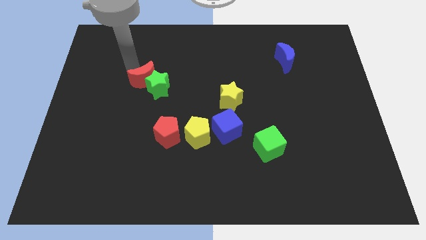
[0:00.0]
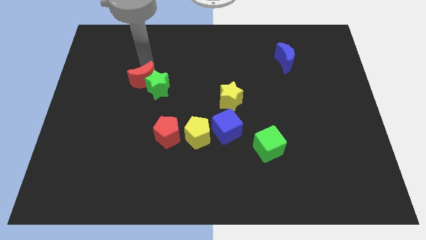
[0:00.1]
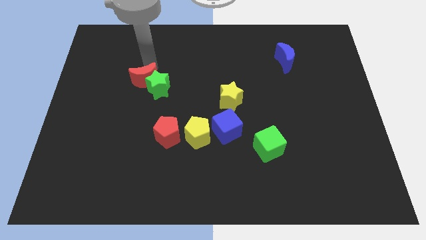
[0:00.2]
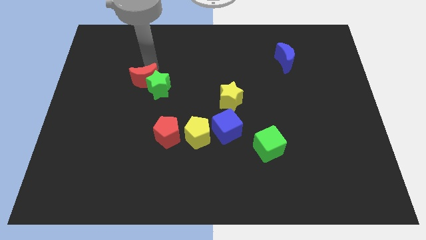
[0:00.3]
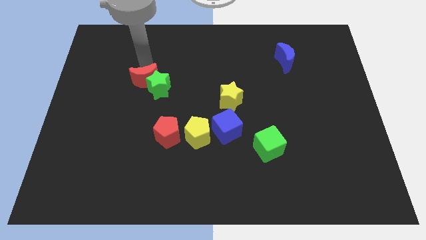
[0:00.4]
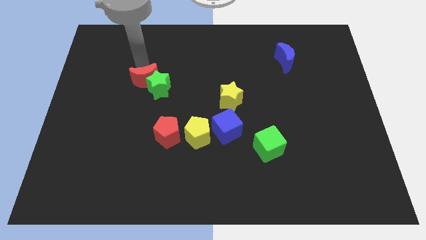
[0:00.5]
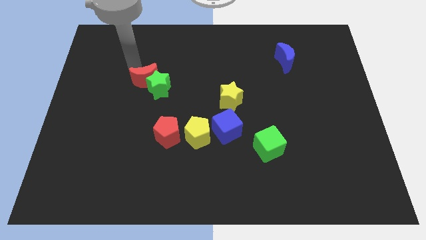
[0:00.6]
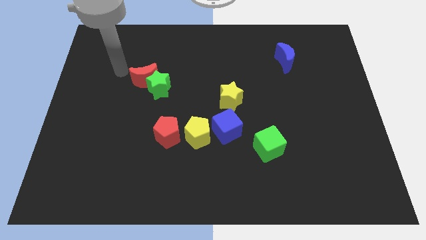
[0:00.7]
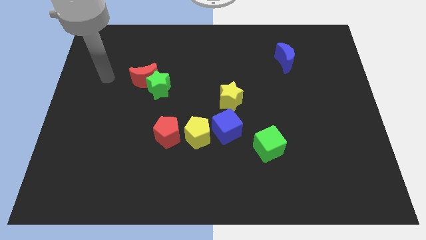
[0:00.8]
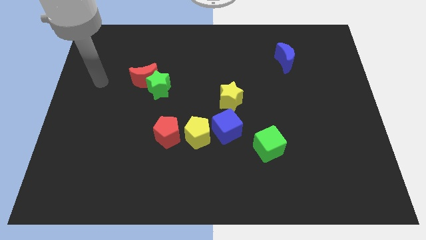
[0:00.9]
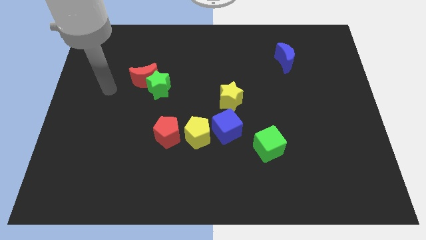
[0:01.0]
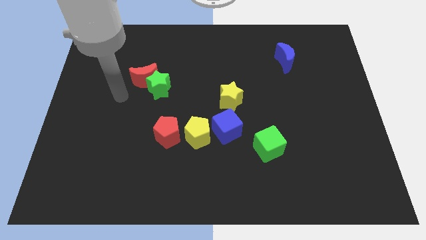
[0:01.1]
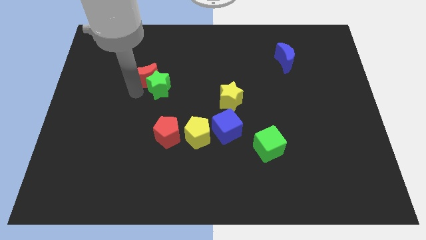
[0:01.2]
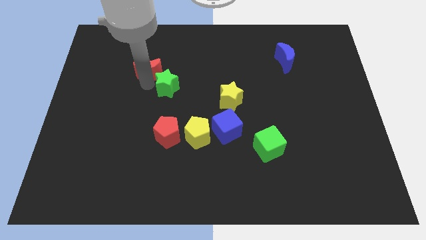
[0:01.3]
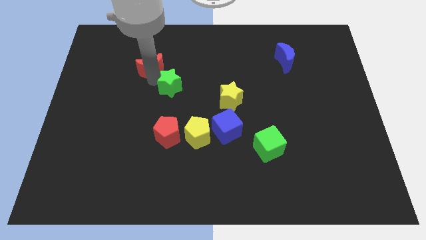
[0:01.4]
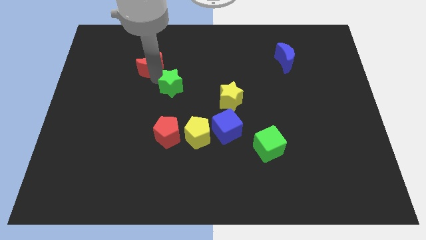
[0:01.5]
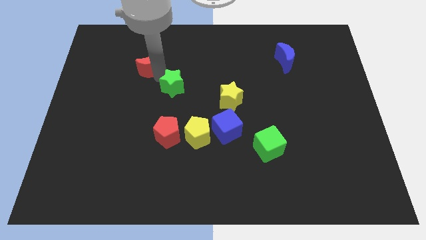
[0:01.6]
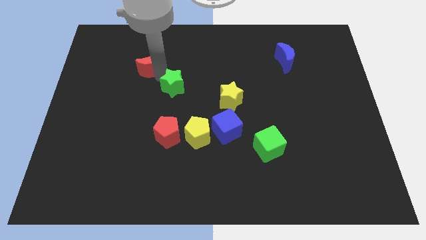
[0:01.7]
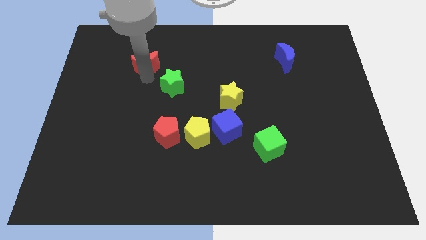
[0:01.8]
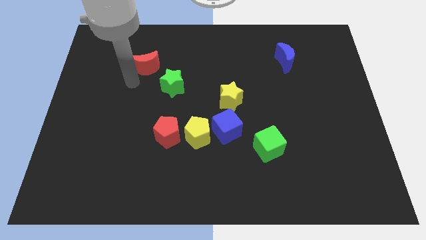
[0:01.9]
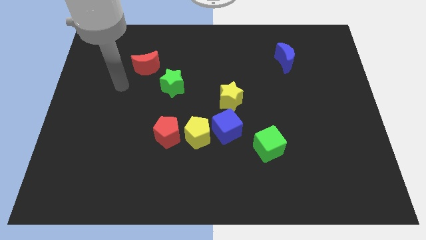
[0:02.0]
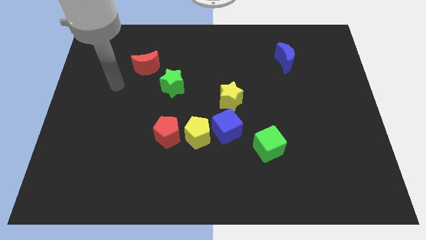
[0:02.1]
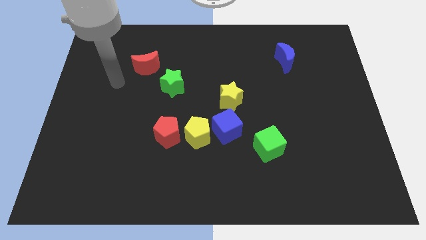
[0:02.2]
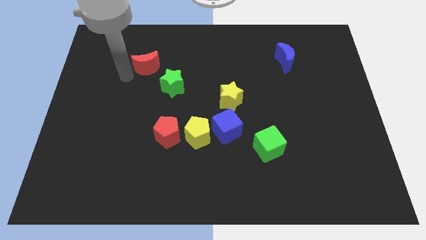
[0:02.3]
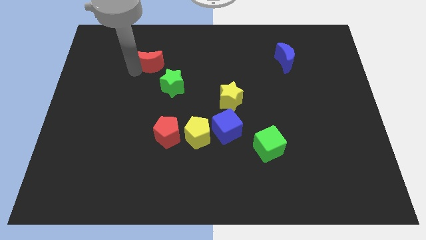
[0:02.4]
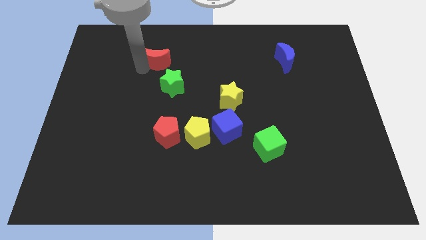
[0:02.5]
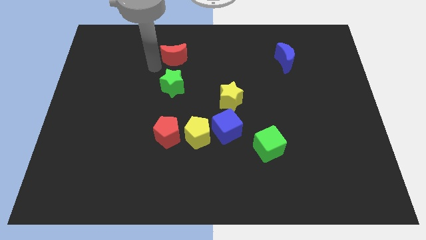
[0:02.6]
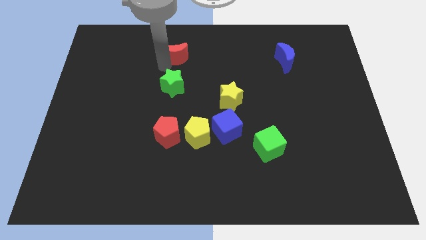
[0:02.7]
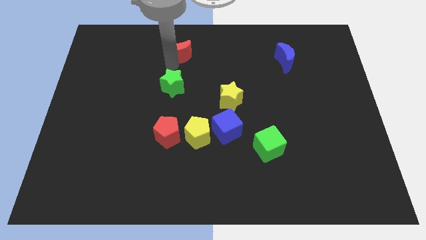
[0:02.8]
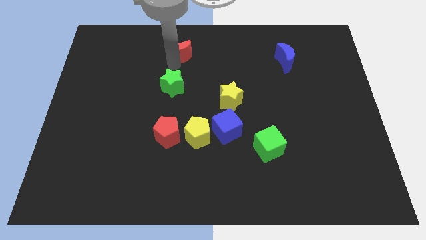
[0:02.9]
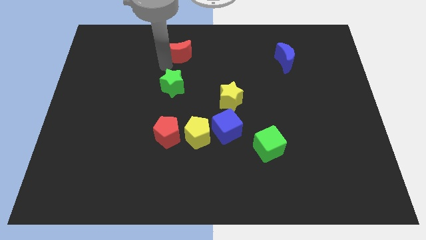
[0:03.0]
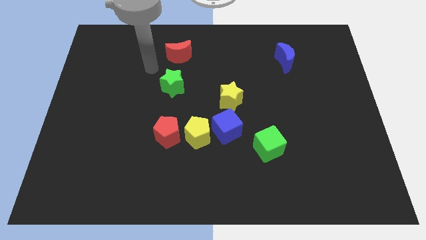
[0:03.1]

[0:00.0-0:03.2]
move the red moon above the green star

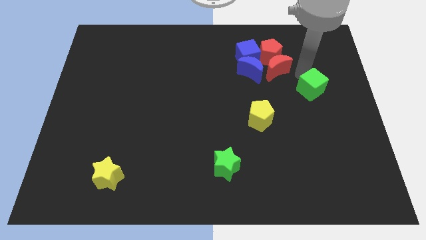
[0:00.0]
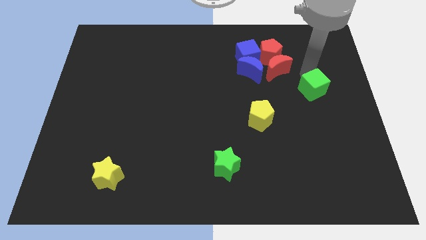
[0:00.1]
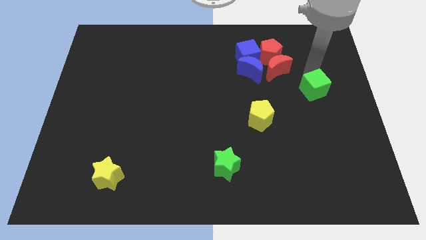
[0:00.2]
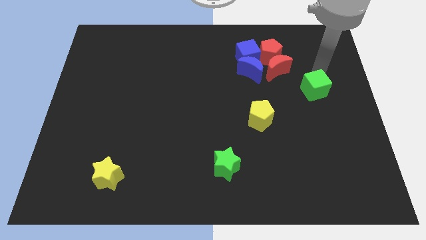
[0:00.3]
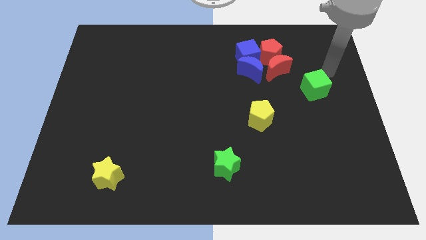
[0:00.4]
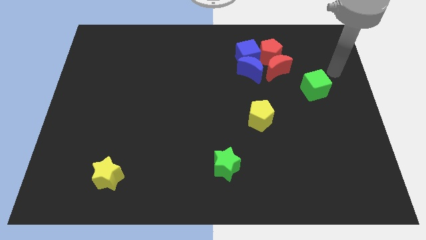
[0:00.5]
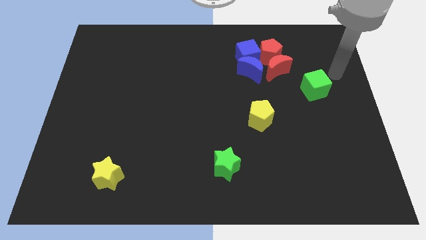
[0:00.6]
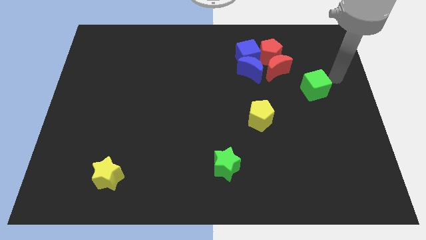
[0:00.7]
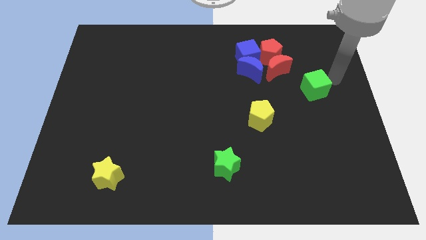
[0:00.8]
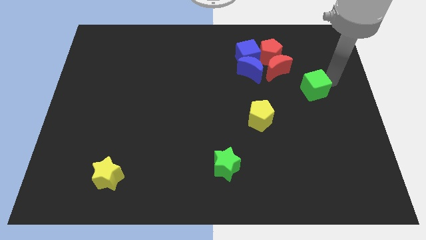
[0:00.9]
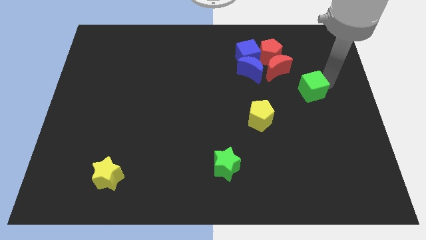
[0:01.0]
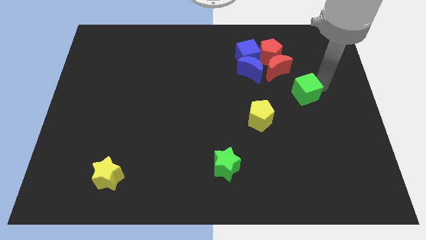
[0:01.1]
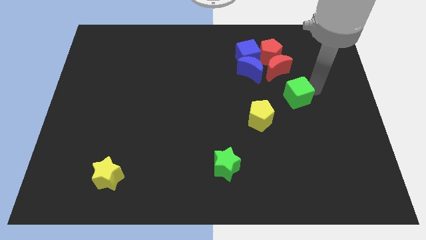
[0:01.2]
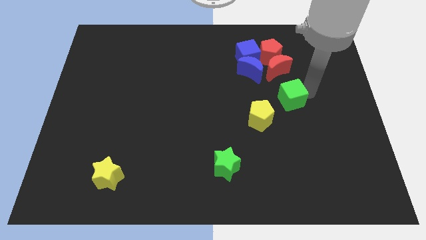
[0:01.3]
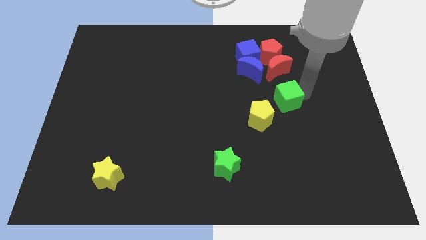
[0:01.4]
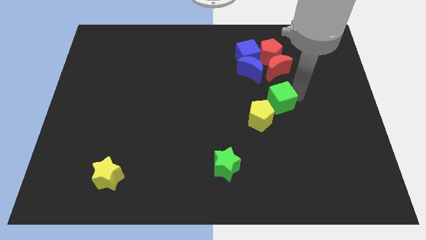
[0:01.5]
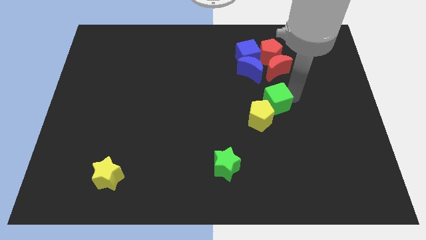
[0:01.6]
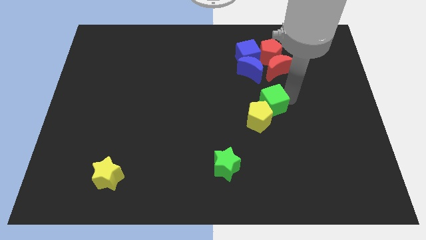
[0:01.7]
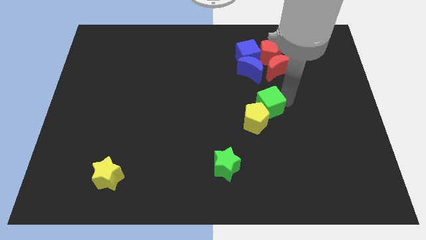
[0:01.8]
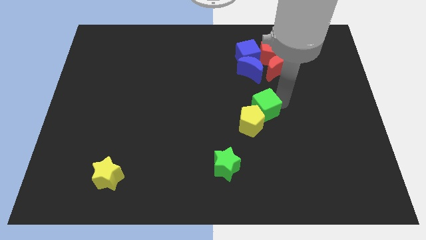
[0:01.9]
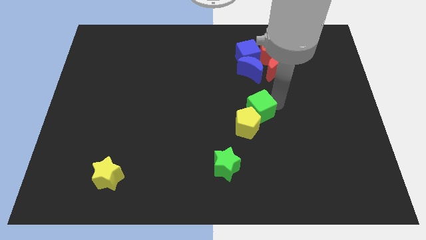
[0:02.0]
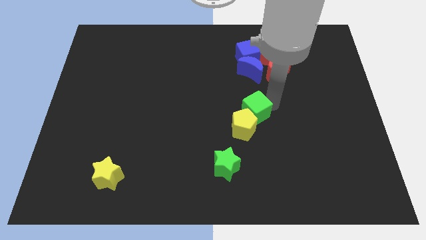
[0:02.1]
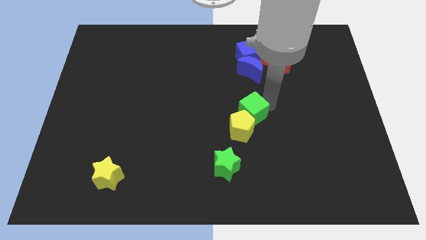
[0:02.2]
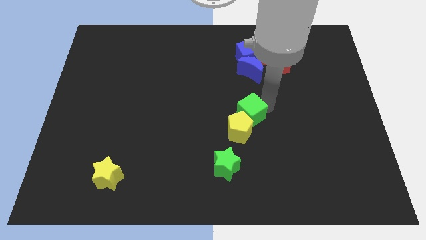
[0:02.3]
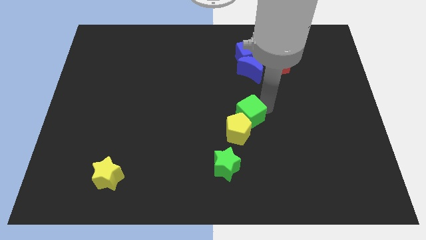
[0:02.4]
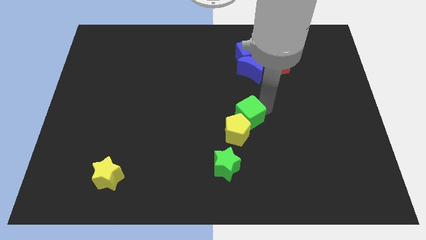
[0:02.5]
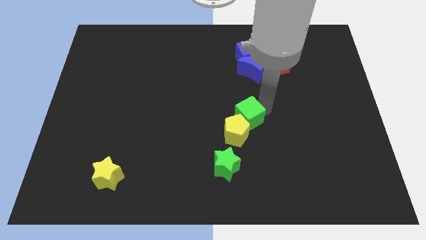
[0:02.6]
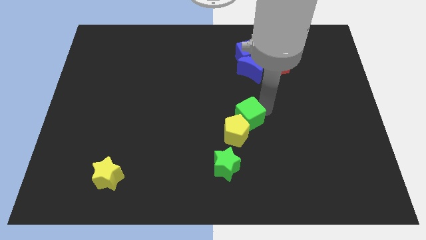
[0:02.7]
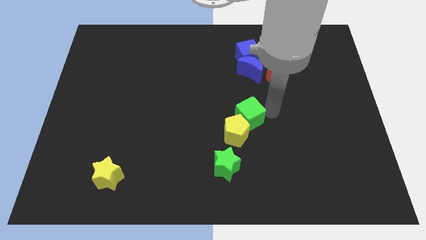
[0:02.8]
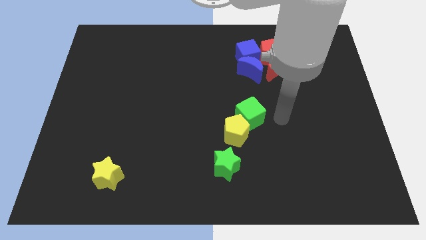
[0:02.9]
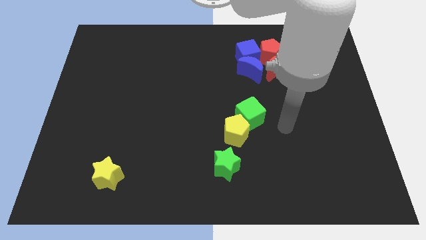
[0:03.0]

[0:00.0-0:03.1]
place the green cube at the top right side of the yellow pentagon

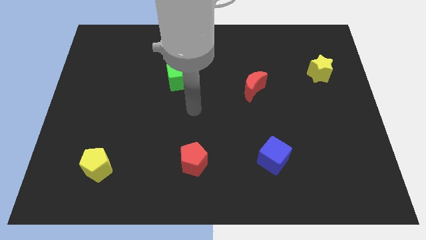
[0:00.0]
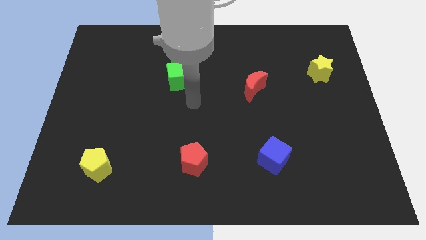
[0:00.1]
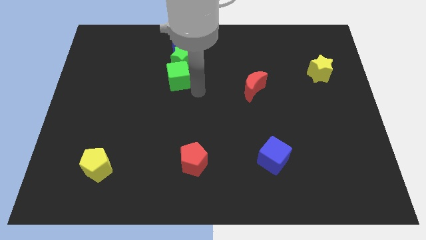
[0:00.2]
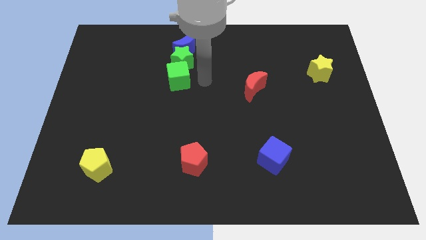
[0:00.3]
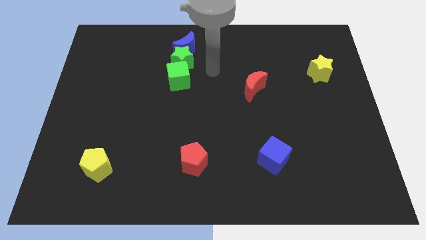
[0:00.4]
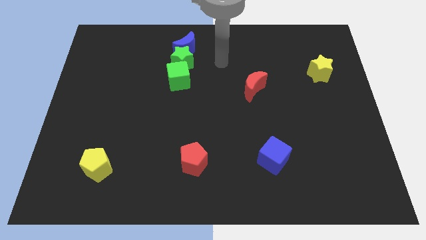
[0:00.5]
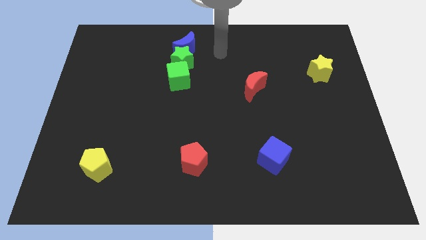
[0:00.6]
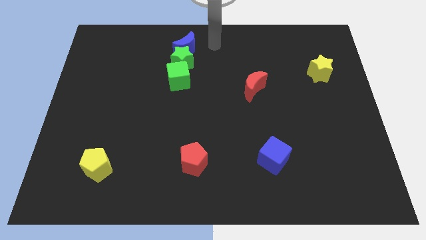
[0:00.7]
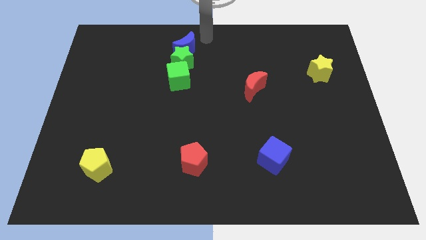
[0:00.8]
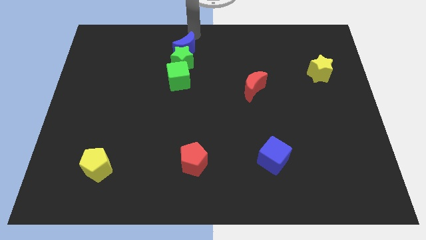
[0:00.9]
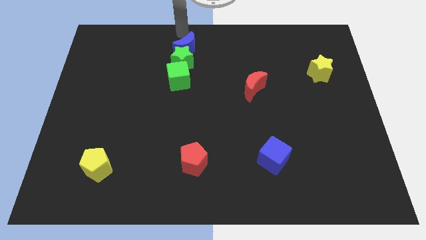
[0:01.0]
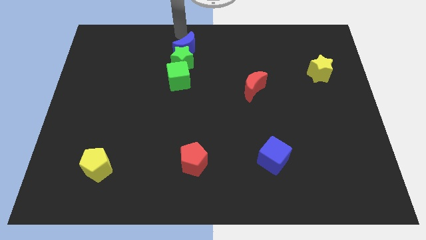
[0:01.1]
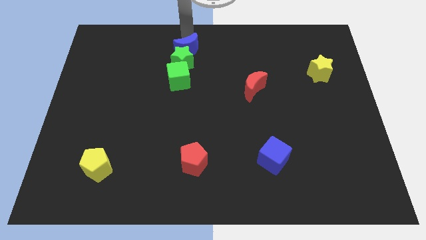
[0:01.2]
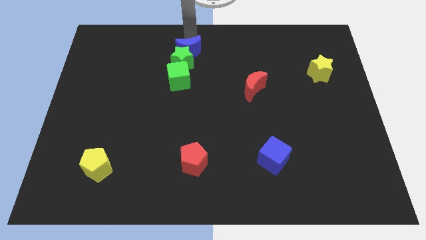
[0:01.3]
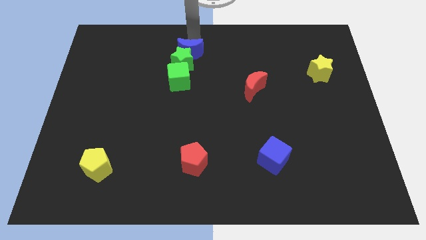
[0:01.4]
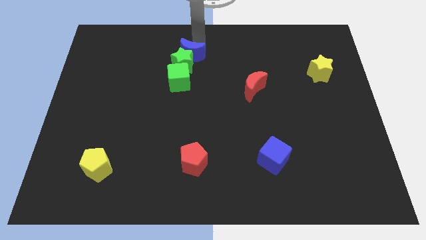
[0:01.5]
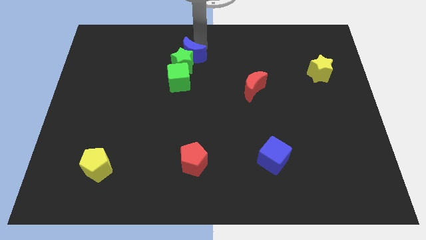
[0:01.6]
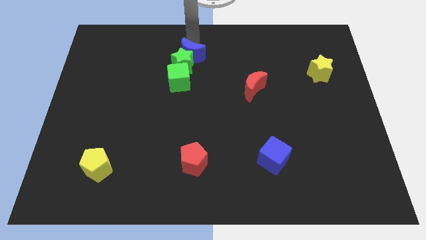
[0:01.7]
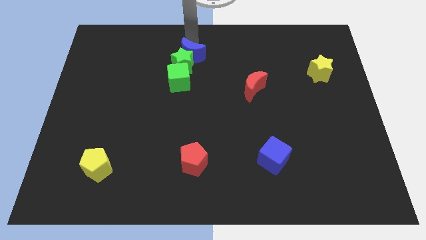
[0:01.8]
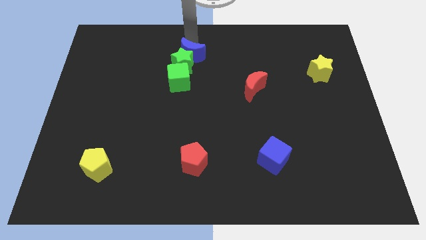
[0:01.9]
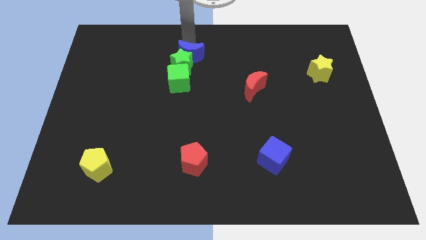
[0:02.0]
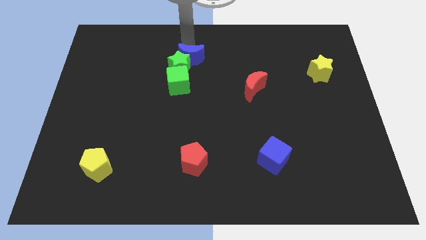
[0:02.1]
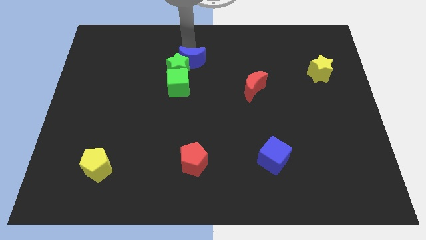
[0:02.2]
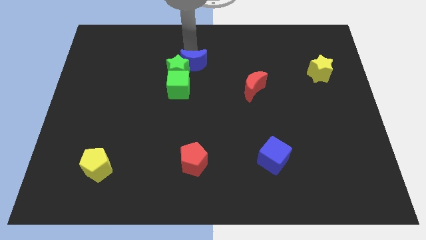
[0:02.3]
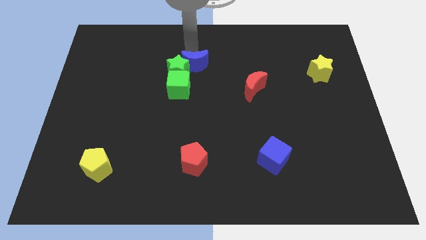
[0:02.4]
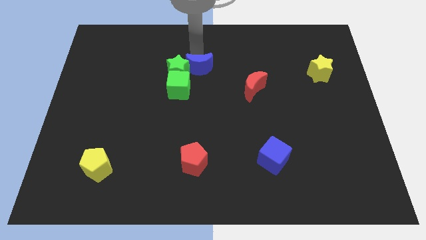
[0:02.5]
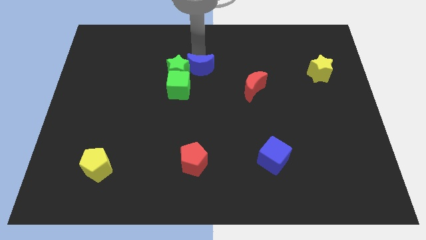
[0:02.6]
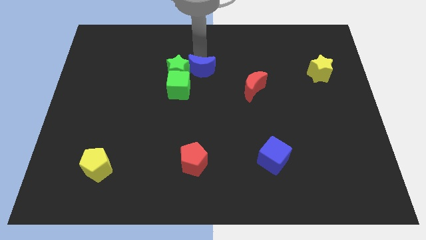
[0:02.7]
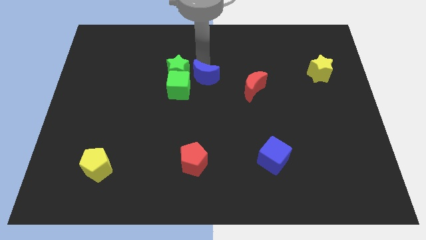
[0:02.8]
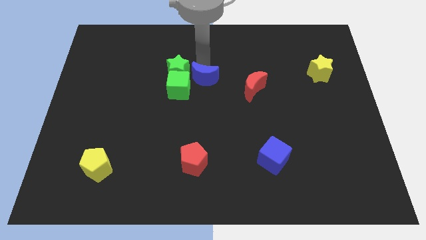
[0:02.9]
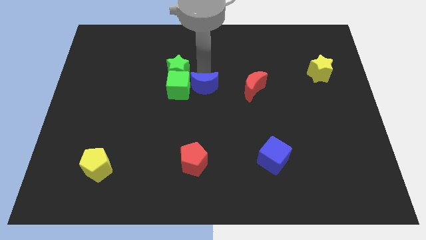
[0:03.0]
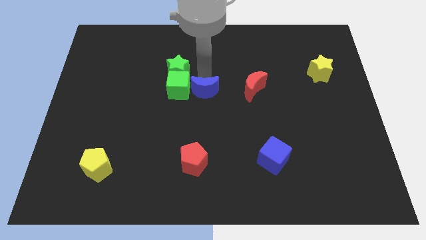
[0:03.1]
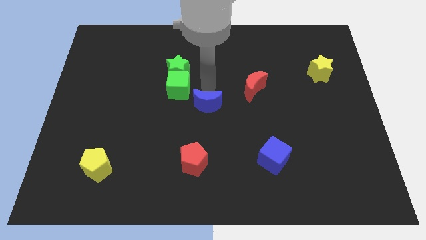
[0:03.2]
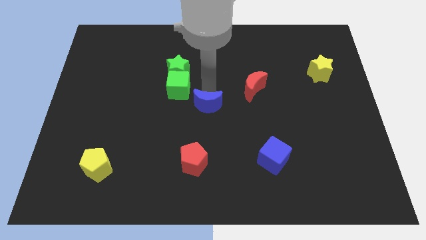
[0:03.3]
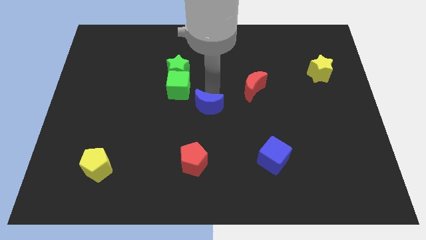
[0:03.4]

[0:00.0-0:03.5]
place blue moon to the center of the board
